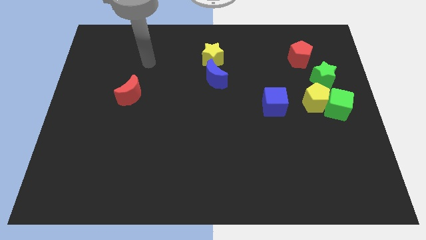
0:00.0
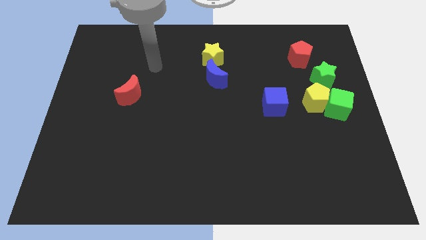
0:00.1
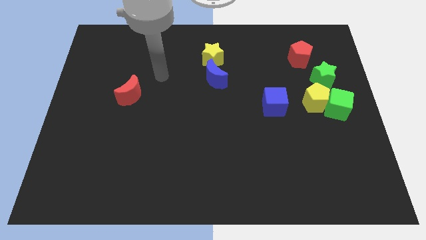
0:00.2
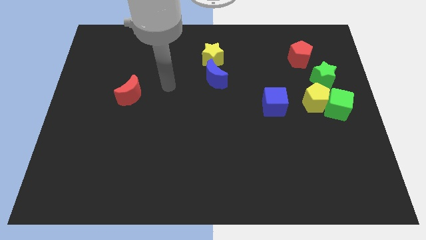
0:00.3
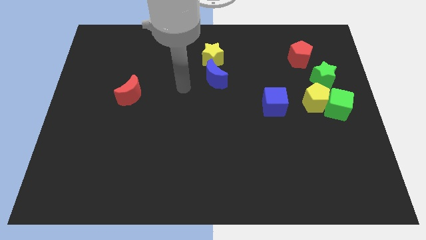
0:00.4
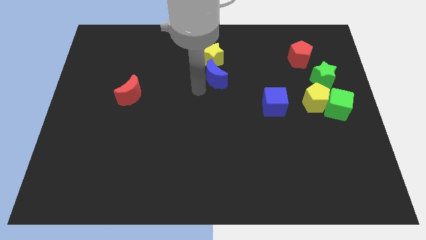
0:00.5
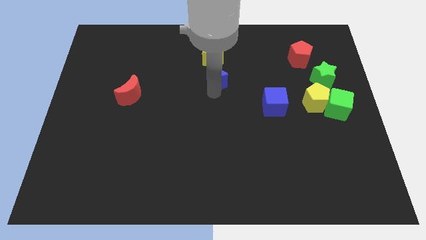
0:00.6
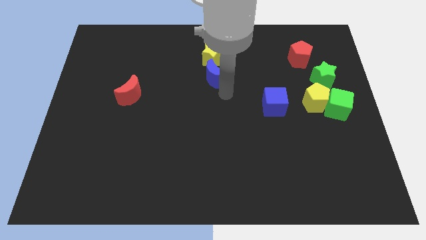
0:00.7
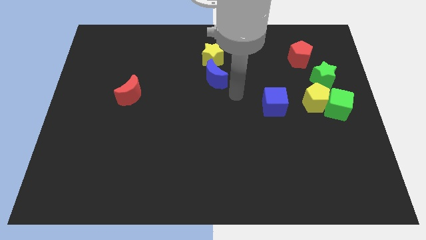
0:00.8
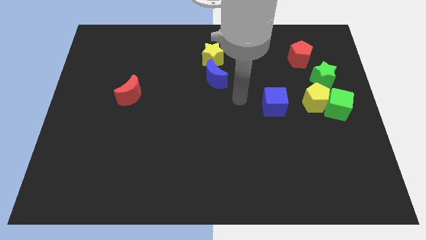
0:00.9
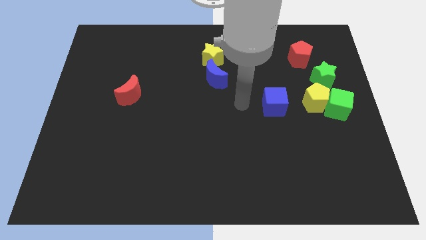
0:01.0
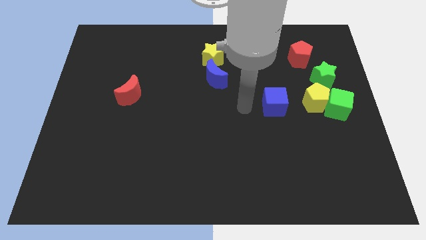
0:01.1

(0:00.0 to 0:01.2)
place your arm left to the blue cube

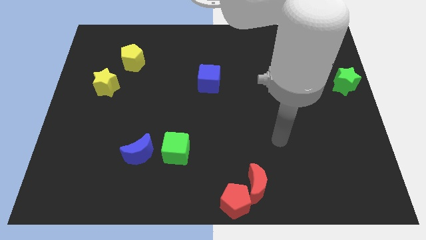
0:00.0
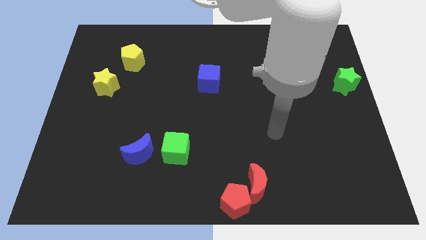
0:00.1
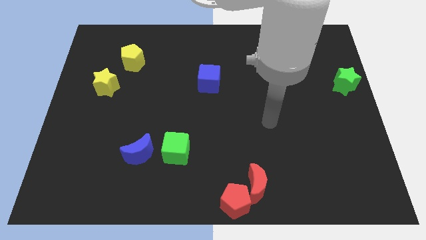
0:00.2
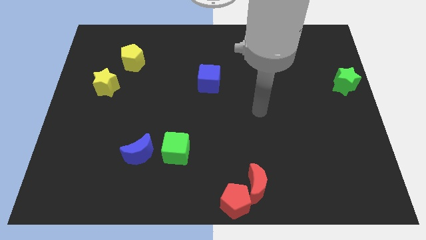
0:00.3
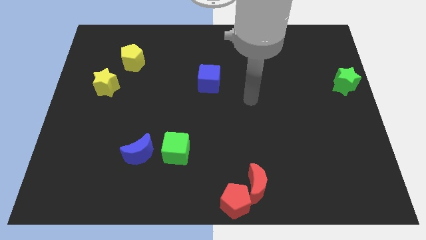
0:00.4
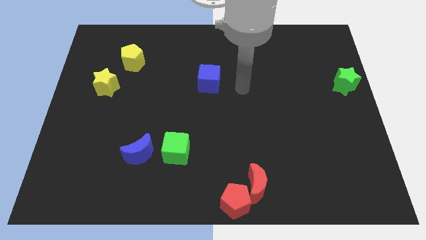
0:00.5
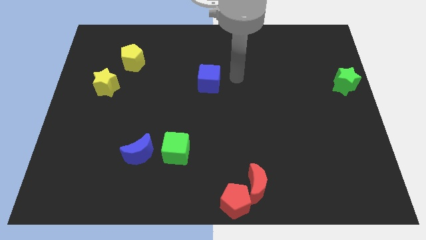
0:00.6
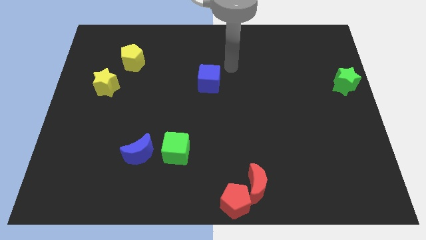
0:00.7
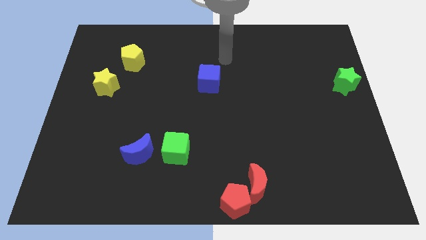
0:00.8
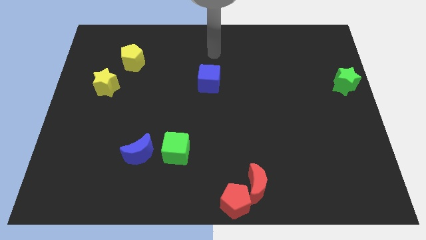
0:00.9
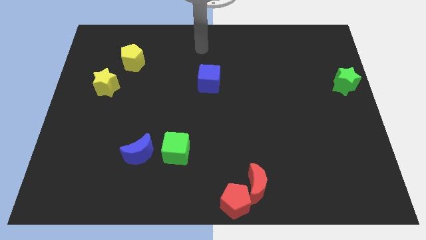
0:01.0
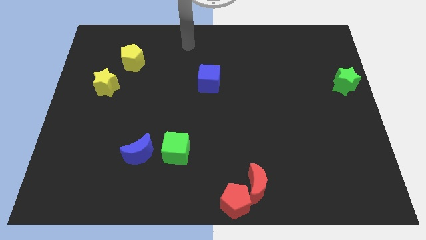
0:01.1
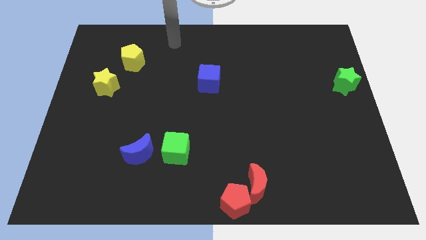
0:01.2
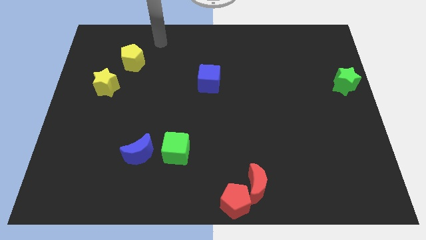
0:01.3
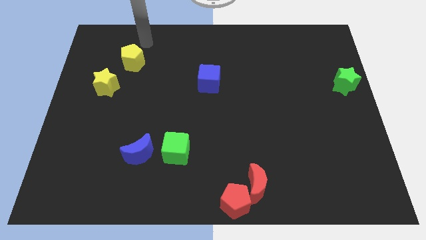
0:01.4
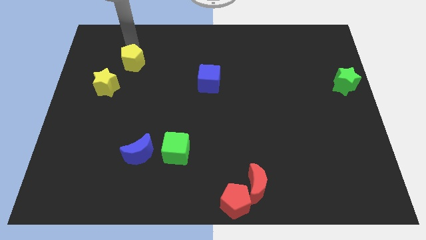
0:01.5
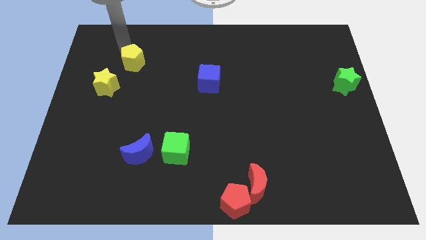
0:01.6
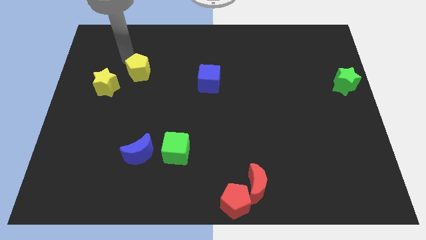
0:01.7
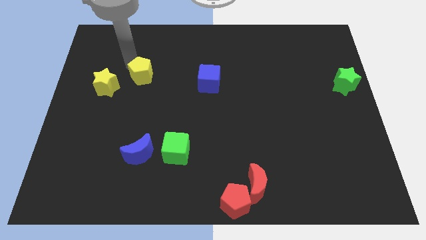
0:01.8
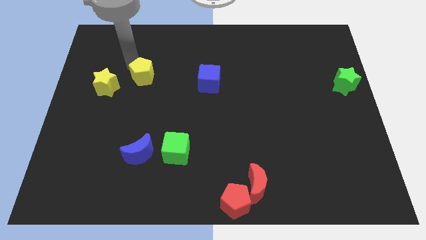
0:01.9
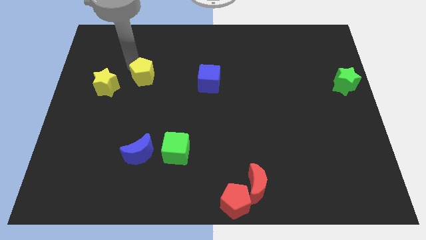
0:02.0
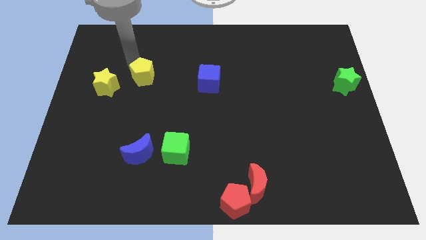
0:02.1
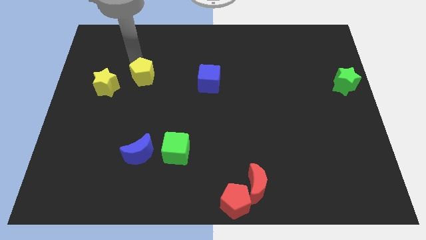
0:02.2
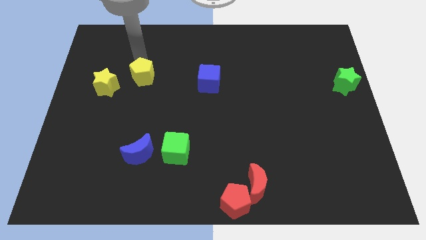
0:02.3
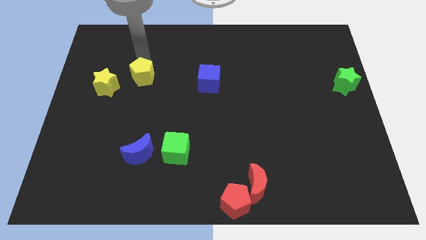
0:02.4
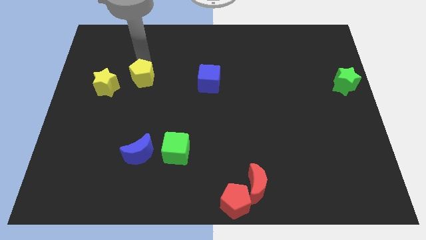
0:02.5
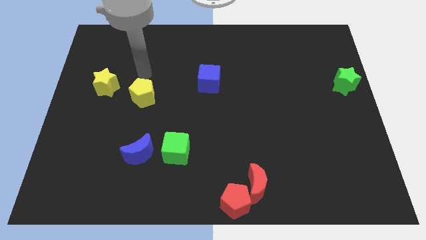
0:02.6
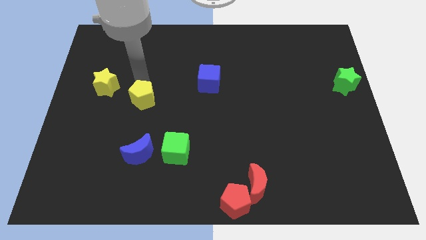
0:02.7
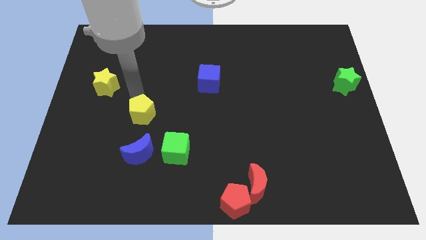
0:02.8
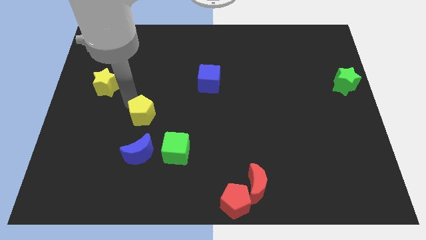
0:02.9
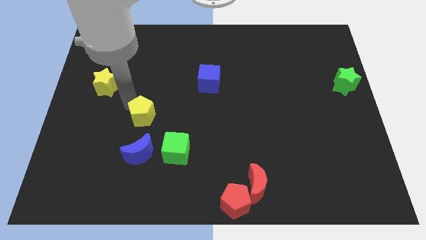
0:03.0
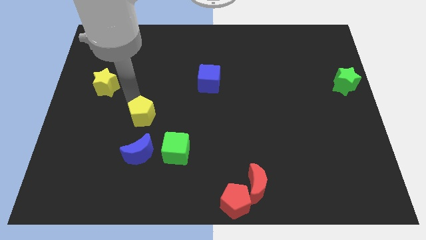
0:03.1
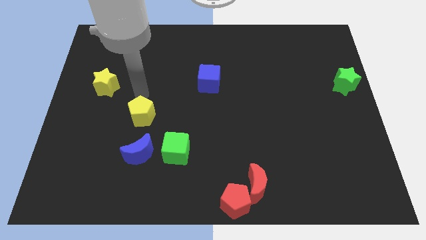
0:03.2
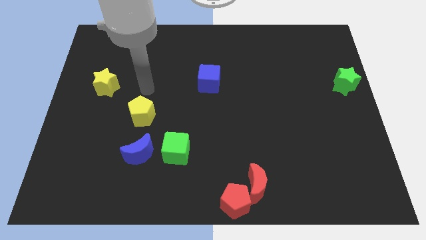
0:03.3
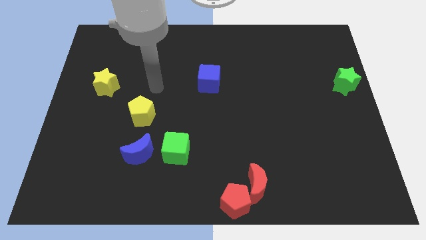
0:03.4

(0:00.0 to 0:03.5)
place the yellow pentagon above the blue moon

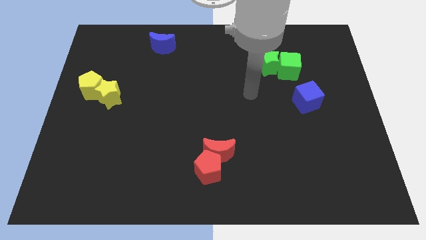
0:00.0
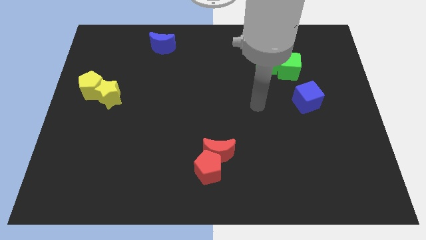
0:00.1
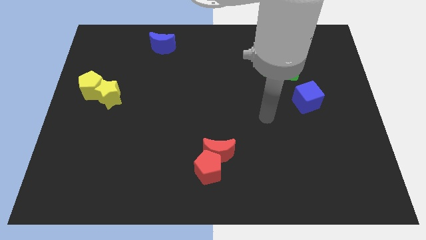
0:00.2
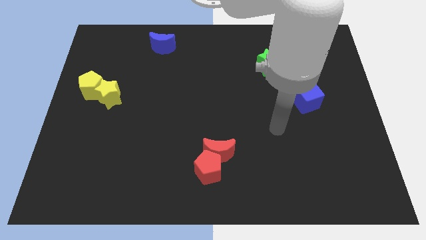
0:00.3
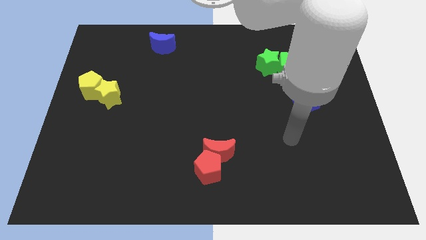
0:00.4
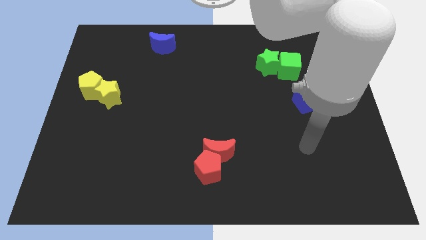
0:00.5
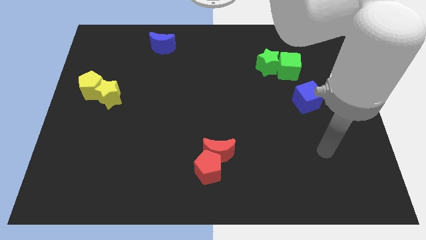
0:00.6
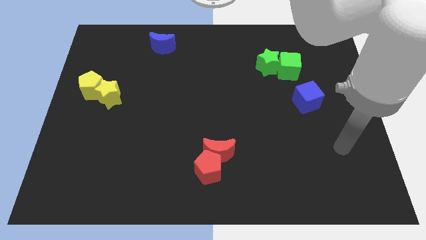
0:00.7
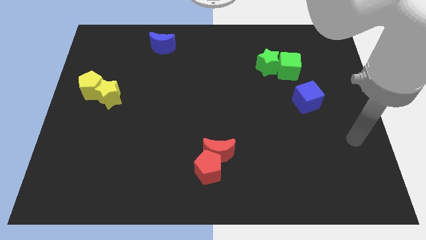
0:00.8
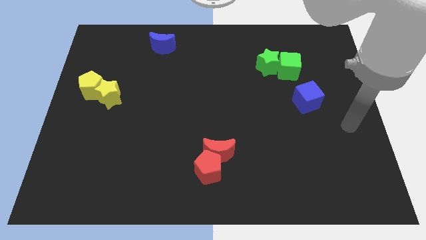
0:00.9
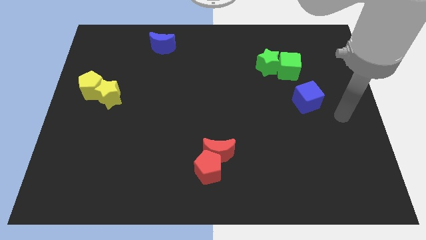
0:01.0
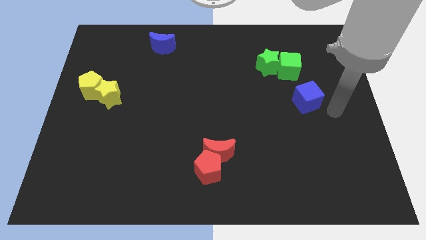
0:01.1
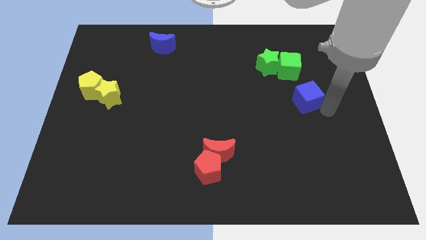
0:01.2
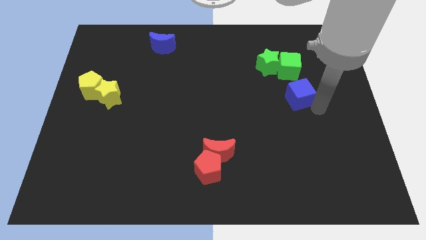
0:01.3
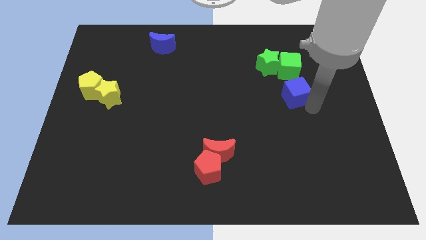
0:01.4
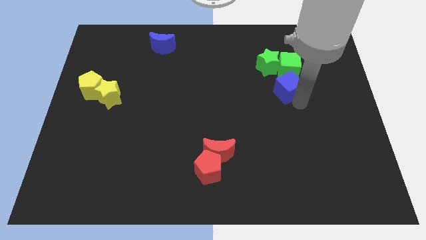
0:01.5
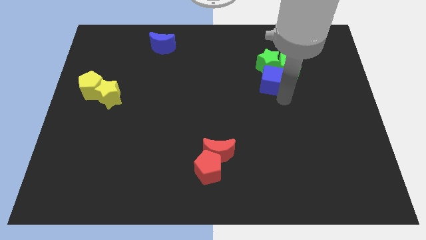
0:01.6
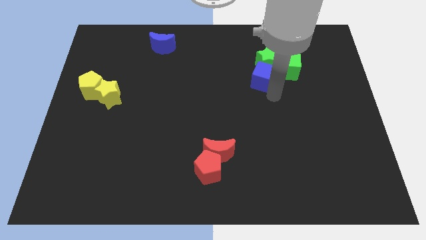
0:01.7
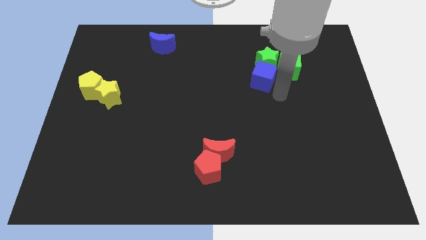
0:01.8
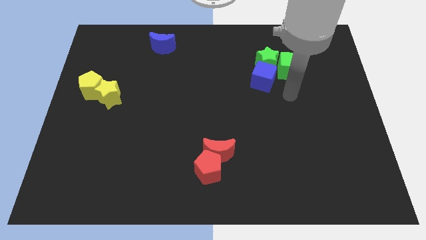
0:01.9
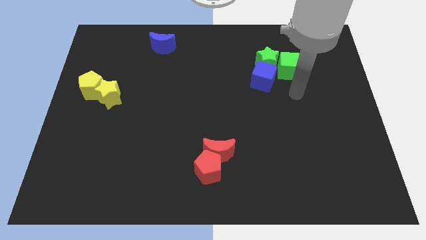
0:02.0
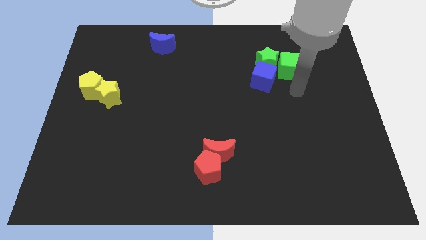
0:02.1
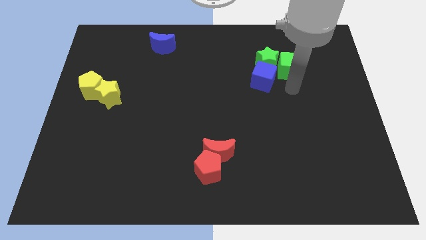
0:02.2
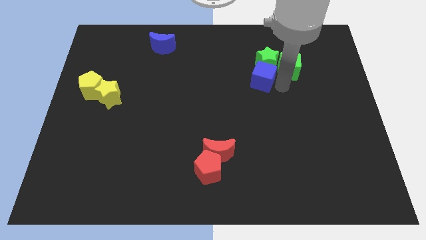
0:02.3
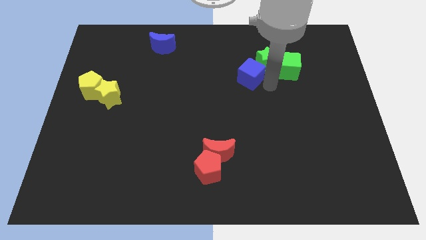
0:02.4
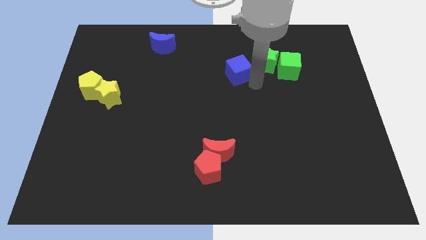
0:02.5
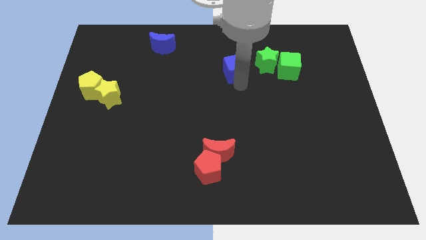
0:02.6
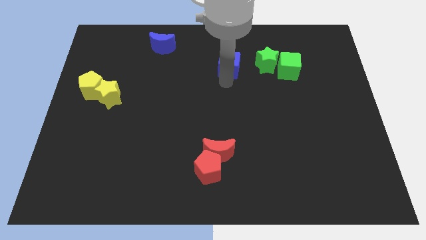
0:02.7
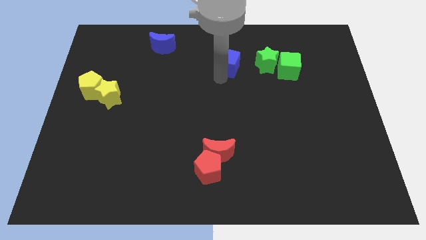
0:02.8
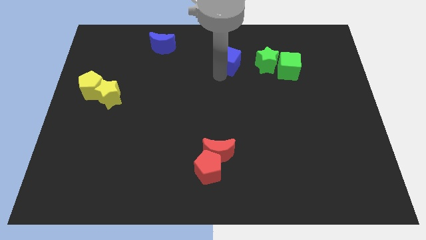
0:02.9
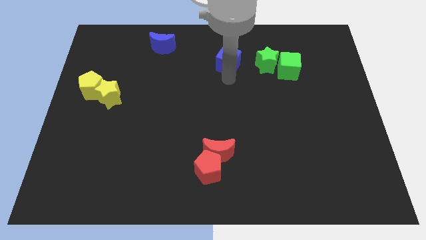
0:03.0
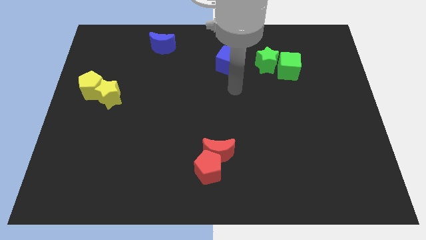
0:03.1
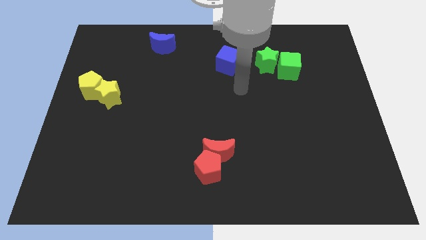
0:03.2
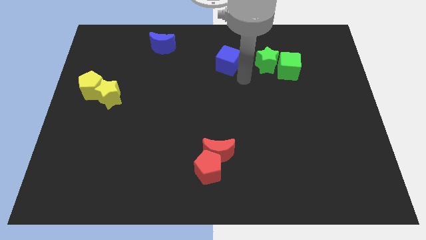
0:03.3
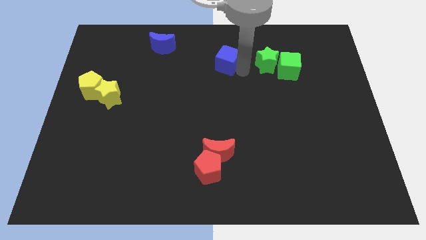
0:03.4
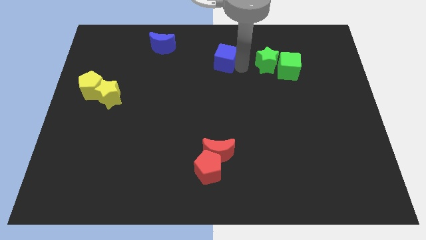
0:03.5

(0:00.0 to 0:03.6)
place the blue cube above the red crescent

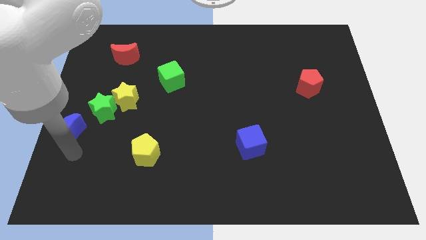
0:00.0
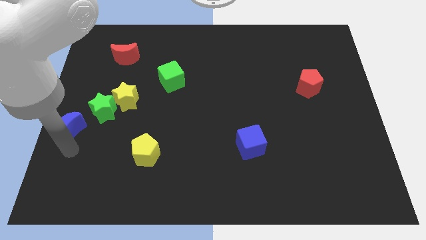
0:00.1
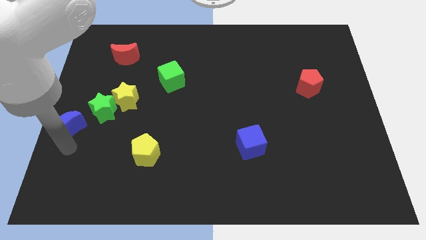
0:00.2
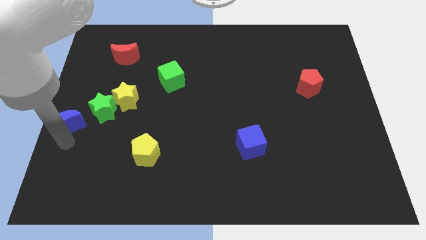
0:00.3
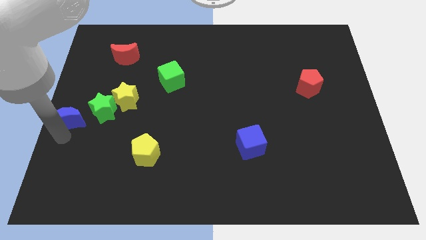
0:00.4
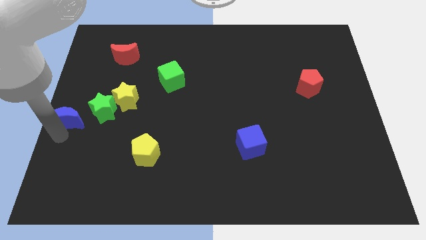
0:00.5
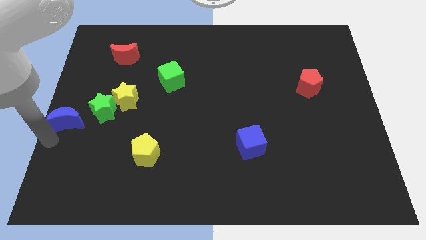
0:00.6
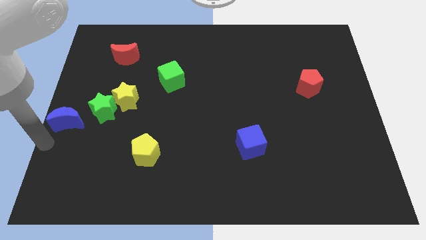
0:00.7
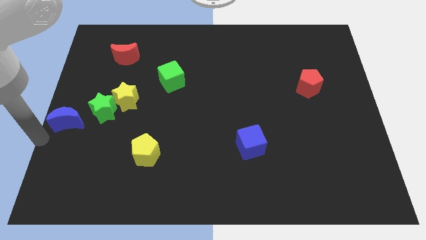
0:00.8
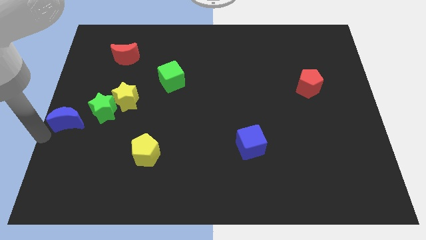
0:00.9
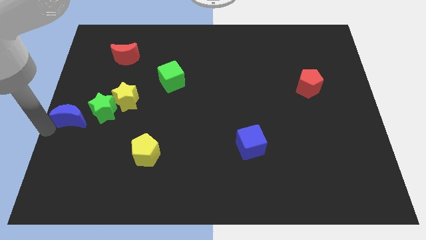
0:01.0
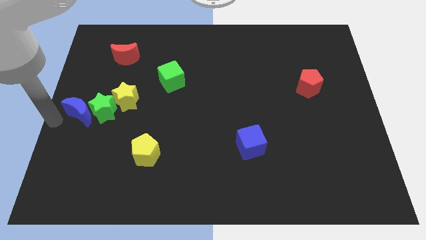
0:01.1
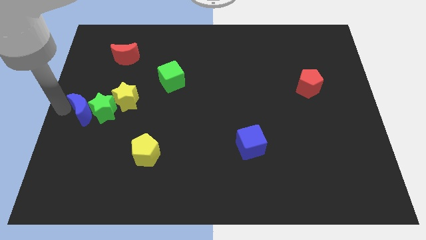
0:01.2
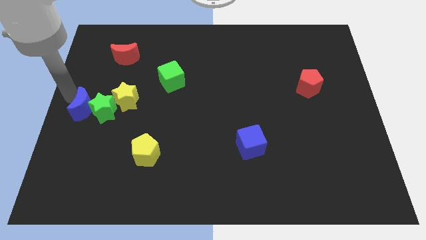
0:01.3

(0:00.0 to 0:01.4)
place blue moon to the left of green star
